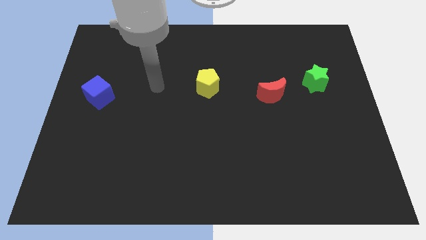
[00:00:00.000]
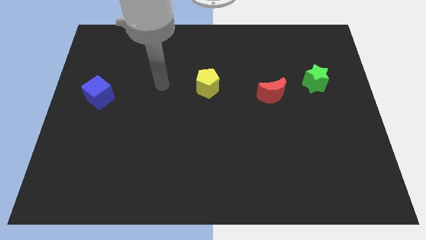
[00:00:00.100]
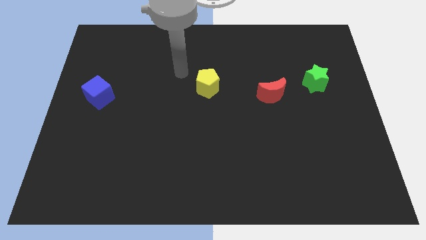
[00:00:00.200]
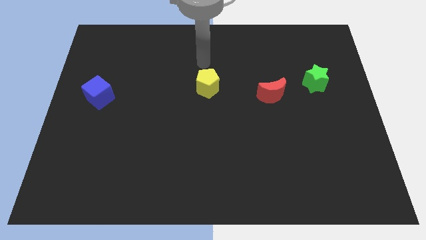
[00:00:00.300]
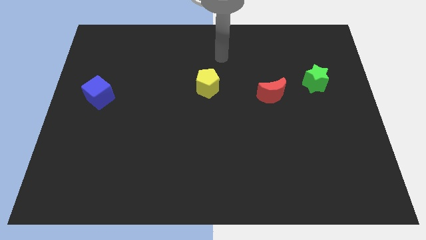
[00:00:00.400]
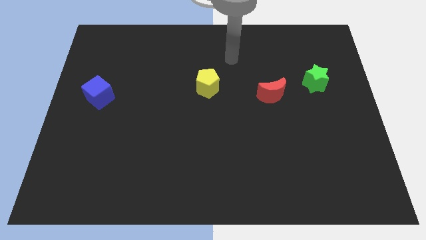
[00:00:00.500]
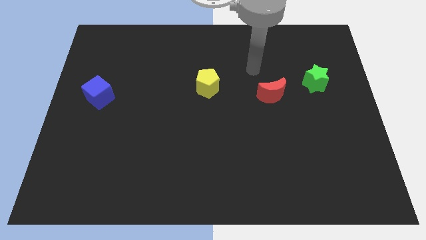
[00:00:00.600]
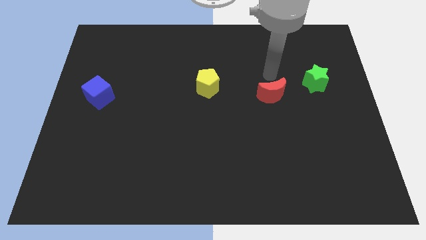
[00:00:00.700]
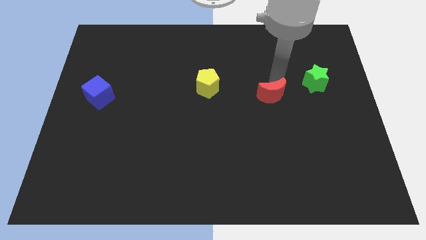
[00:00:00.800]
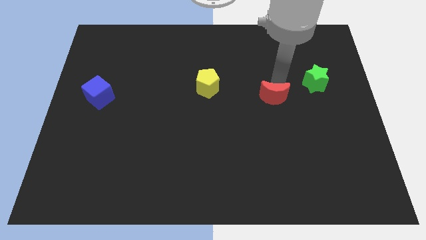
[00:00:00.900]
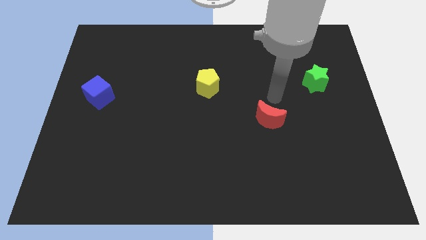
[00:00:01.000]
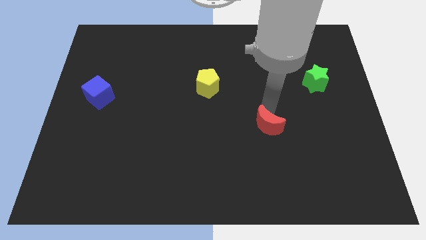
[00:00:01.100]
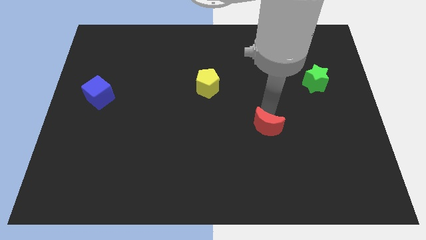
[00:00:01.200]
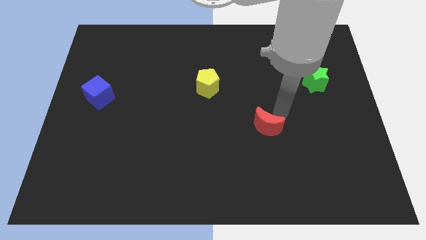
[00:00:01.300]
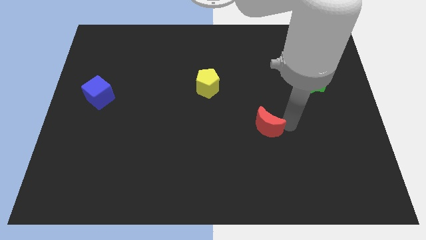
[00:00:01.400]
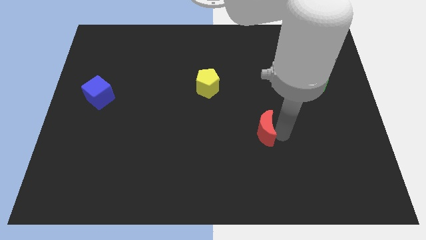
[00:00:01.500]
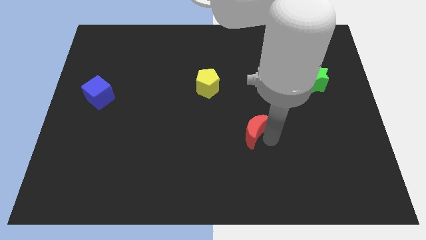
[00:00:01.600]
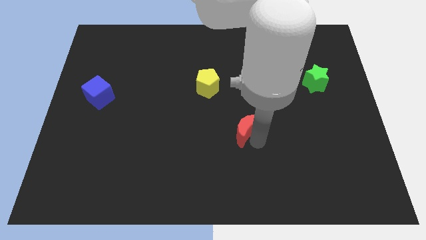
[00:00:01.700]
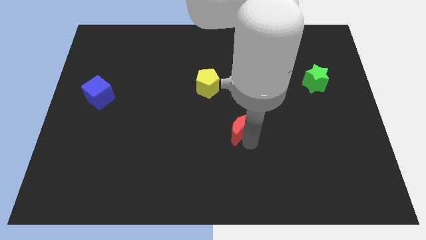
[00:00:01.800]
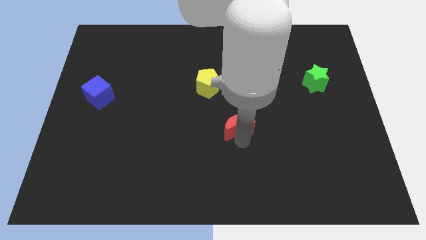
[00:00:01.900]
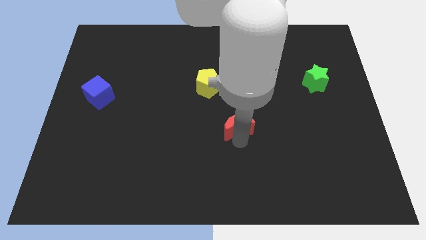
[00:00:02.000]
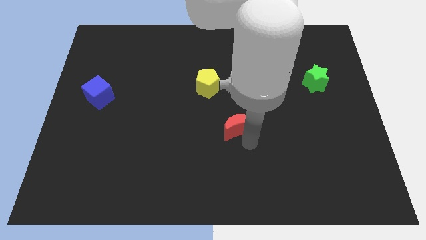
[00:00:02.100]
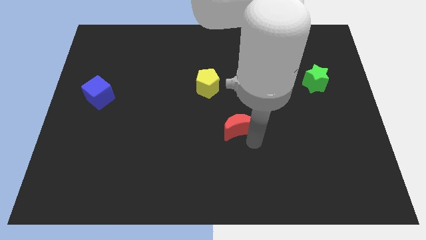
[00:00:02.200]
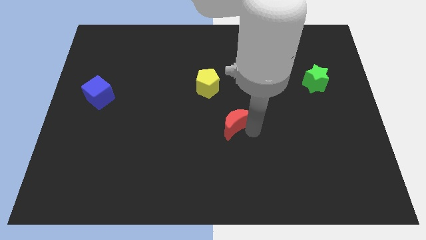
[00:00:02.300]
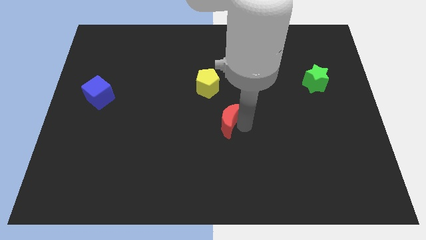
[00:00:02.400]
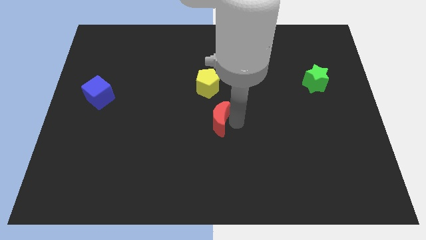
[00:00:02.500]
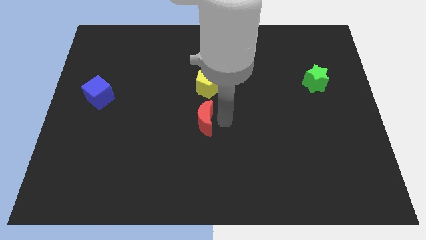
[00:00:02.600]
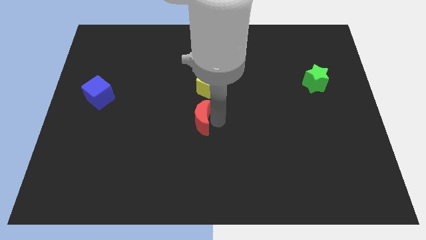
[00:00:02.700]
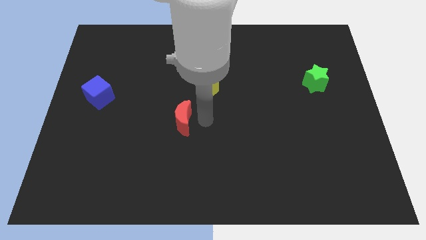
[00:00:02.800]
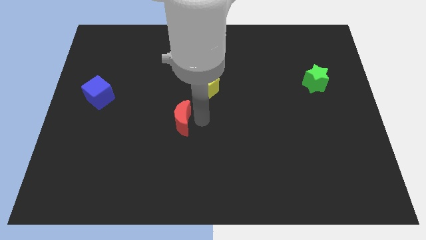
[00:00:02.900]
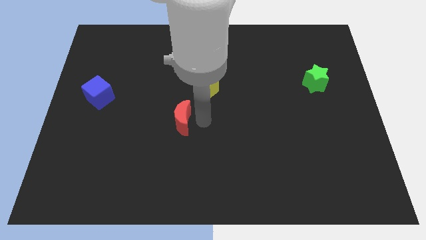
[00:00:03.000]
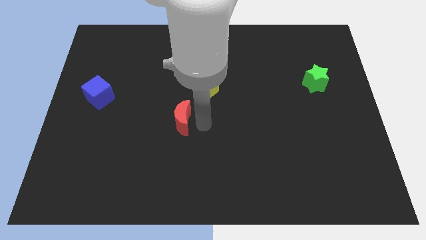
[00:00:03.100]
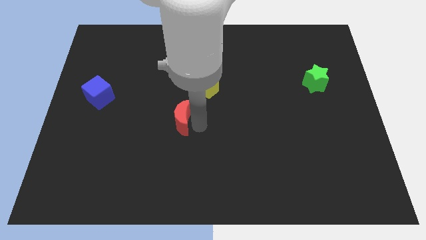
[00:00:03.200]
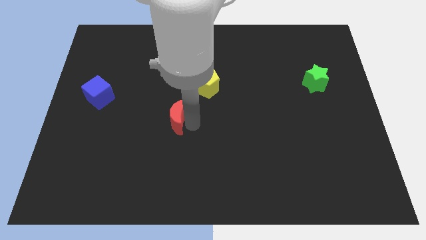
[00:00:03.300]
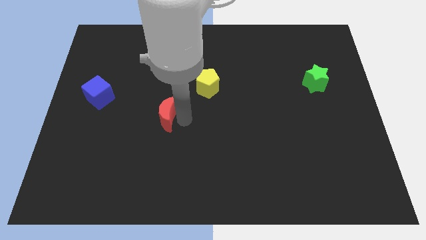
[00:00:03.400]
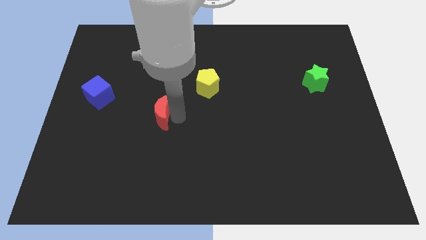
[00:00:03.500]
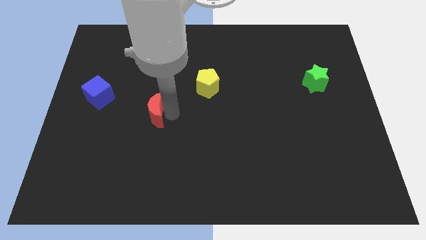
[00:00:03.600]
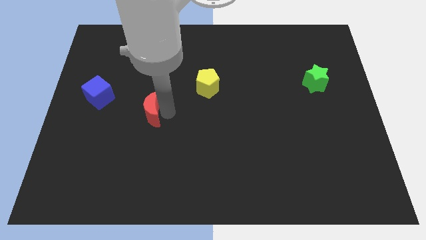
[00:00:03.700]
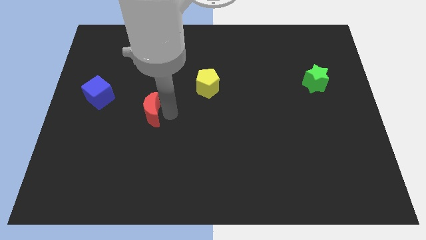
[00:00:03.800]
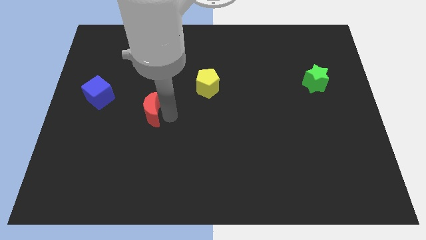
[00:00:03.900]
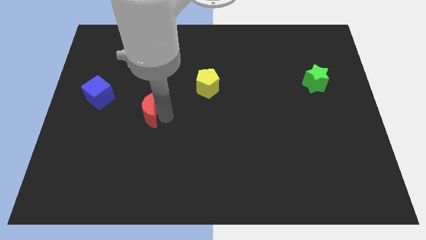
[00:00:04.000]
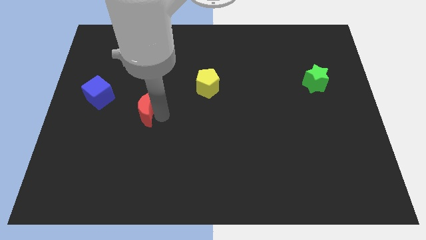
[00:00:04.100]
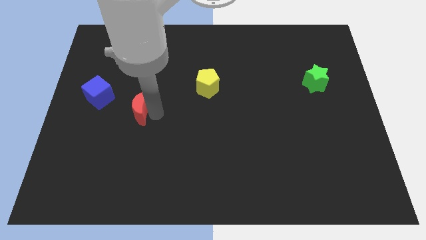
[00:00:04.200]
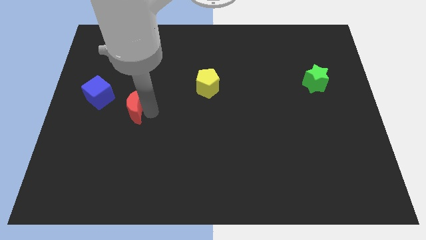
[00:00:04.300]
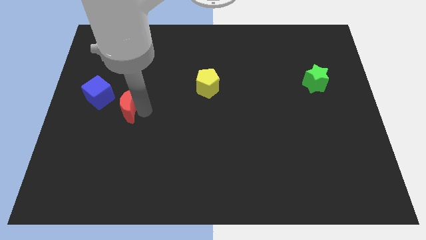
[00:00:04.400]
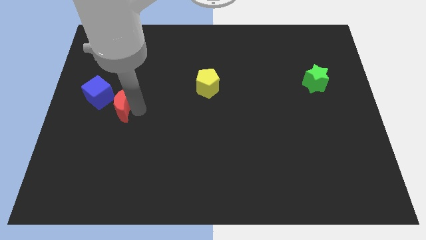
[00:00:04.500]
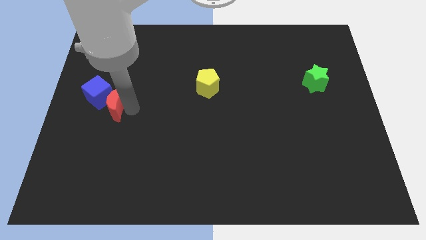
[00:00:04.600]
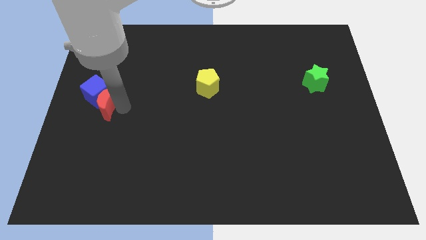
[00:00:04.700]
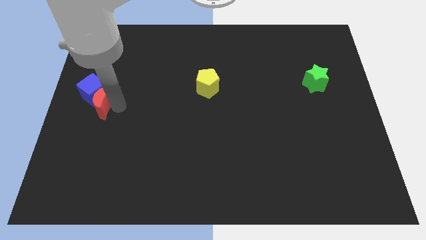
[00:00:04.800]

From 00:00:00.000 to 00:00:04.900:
push the moon close to the cube

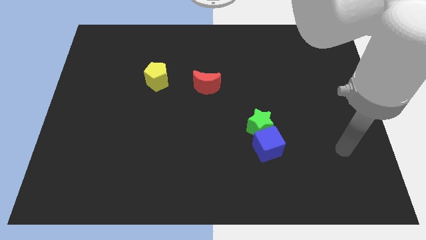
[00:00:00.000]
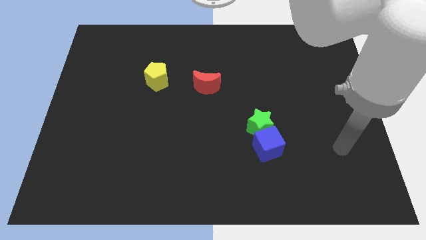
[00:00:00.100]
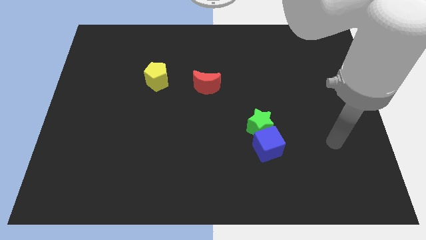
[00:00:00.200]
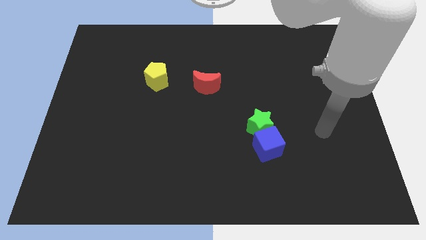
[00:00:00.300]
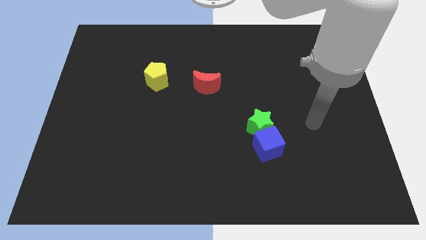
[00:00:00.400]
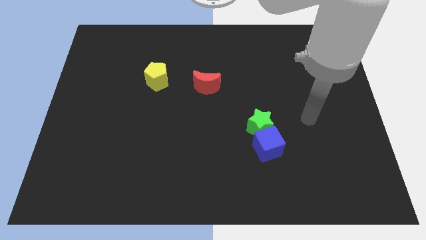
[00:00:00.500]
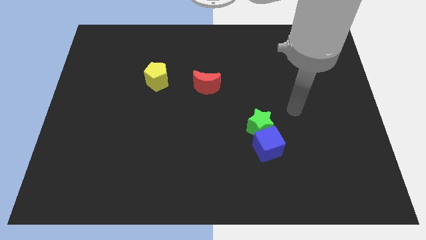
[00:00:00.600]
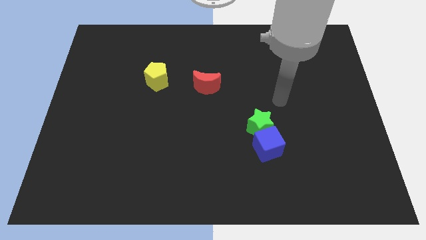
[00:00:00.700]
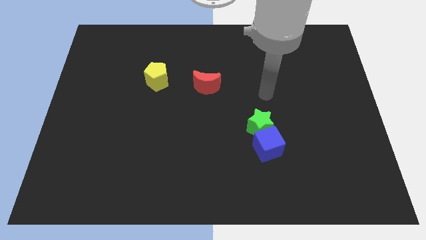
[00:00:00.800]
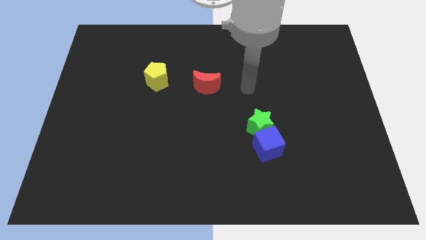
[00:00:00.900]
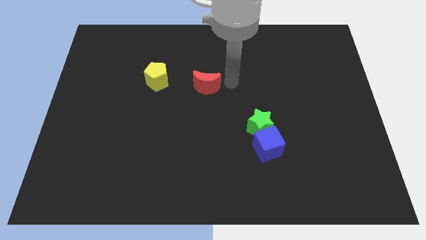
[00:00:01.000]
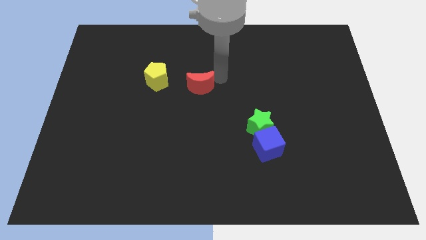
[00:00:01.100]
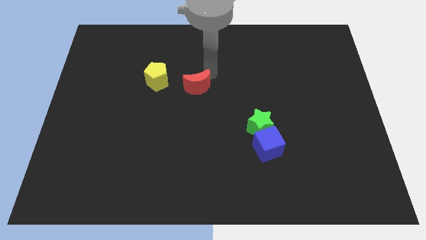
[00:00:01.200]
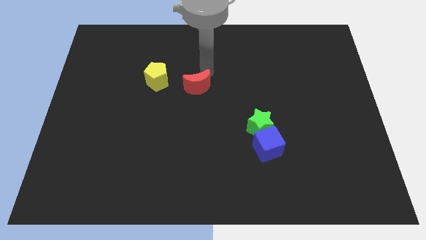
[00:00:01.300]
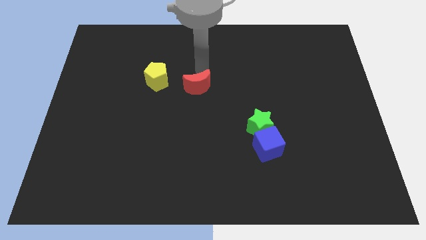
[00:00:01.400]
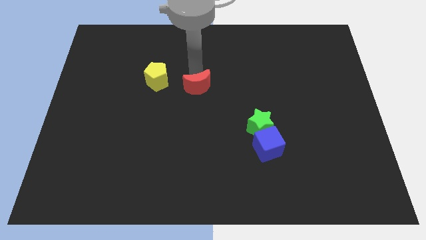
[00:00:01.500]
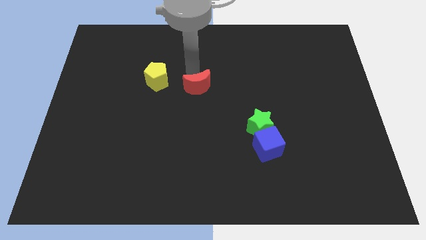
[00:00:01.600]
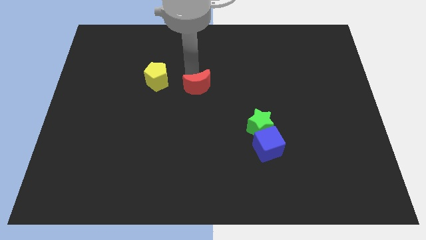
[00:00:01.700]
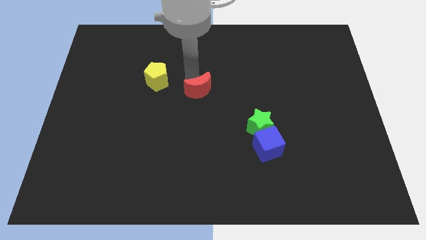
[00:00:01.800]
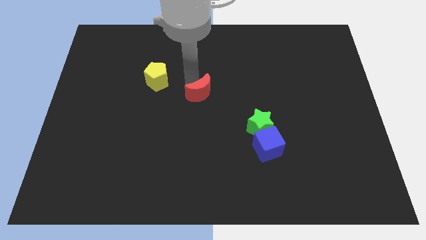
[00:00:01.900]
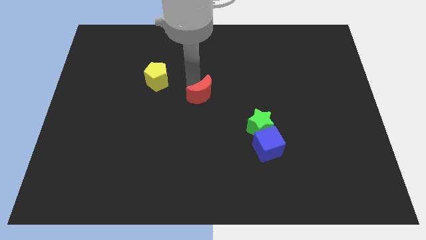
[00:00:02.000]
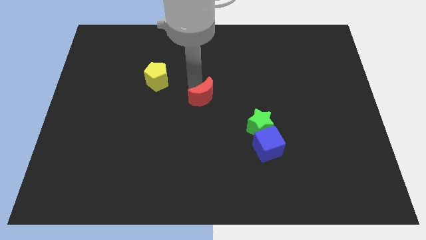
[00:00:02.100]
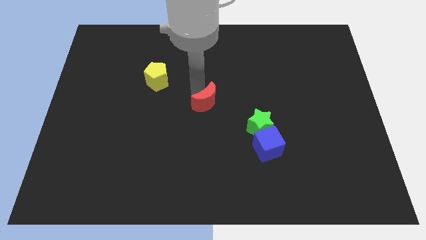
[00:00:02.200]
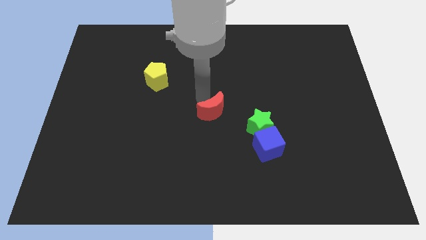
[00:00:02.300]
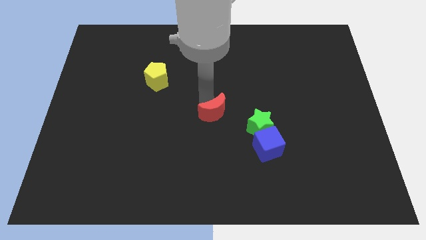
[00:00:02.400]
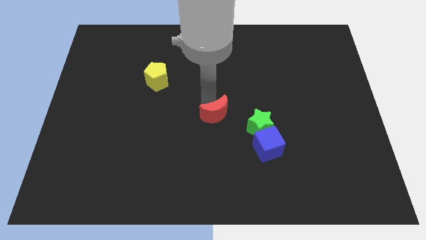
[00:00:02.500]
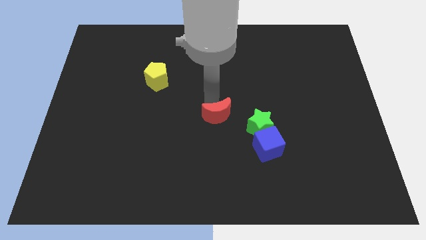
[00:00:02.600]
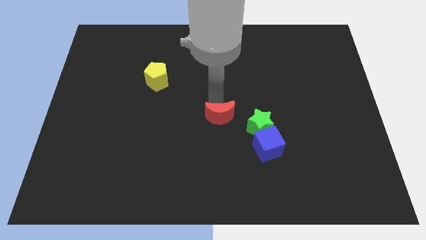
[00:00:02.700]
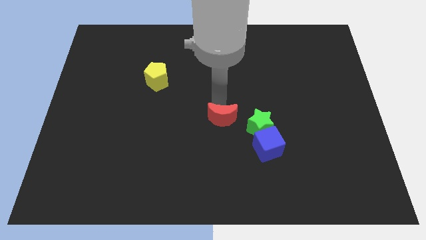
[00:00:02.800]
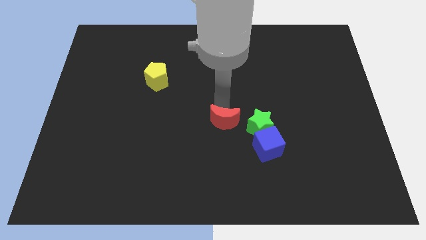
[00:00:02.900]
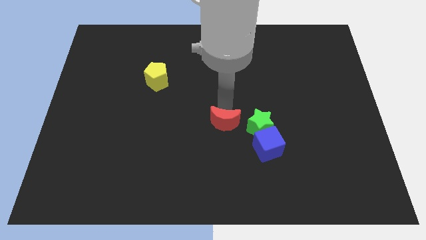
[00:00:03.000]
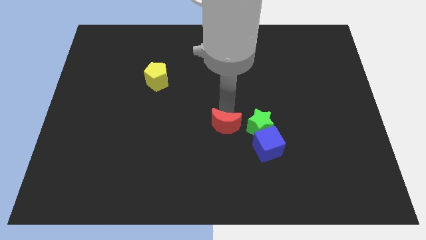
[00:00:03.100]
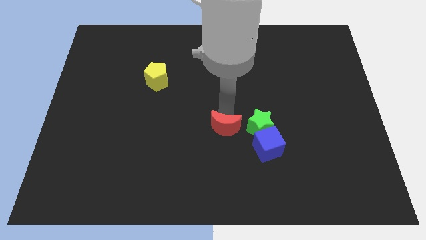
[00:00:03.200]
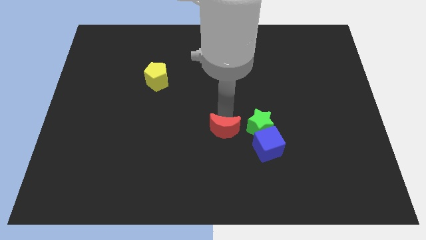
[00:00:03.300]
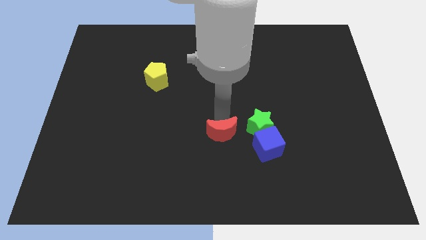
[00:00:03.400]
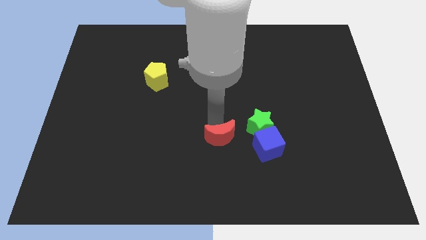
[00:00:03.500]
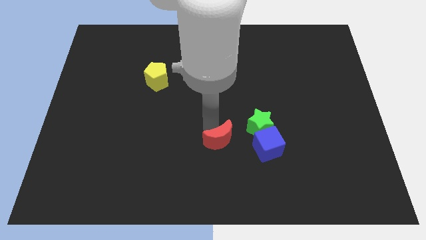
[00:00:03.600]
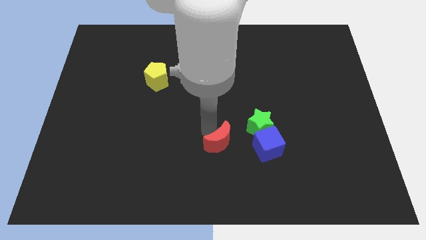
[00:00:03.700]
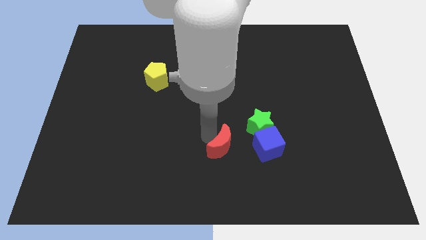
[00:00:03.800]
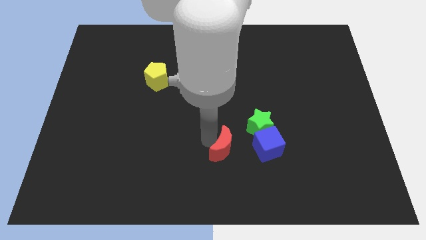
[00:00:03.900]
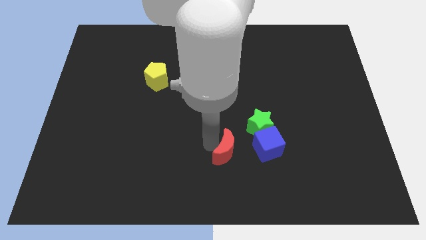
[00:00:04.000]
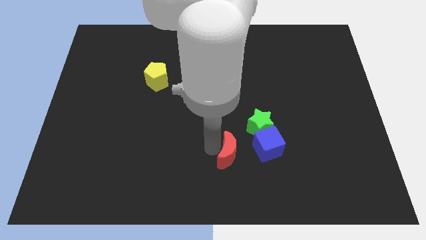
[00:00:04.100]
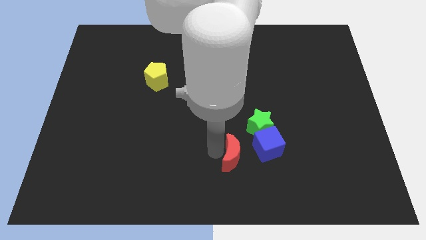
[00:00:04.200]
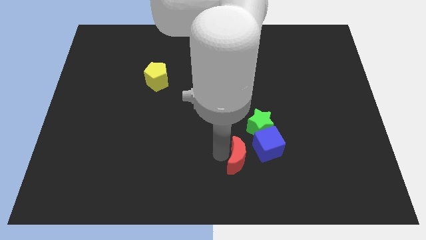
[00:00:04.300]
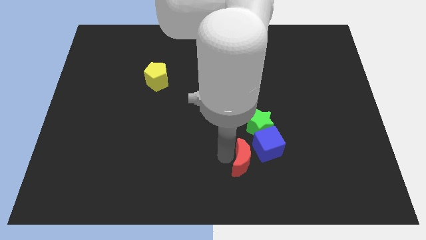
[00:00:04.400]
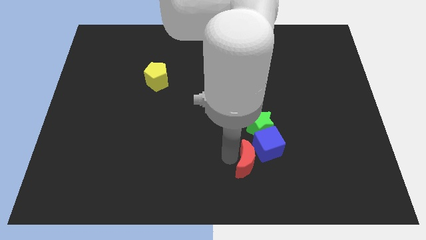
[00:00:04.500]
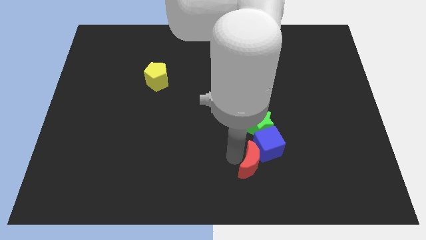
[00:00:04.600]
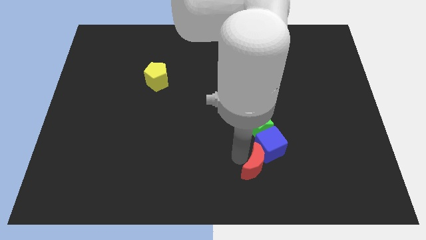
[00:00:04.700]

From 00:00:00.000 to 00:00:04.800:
push the red moon close to the blue cube
